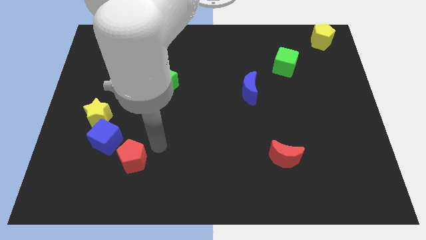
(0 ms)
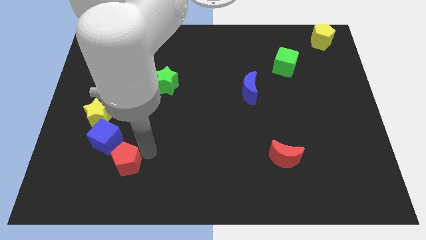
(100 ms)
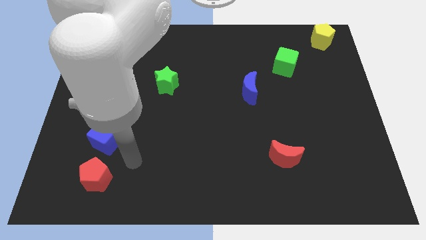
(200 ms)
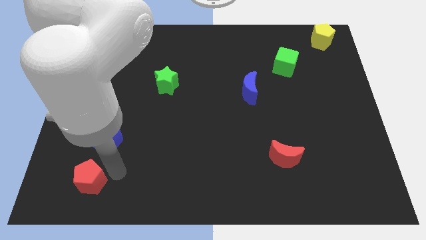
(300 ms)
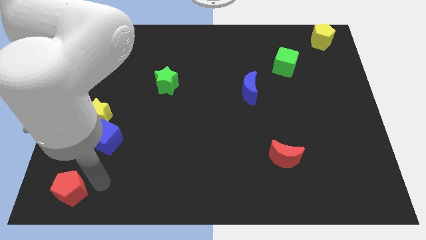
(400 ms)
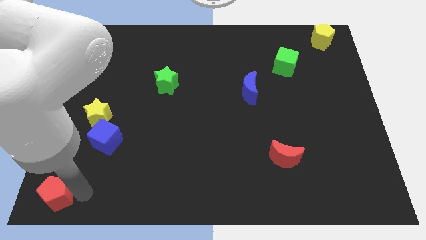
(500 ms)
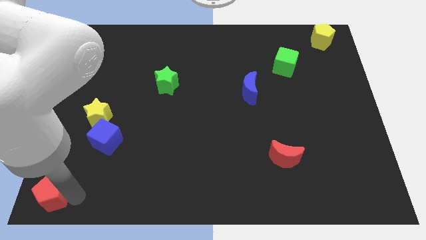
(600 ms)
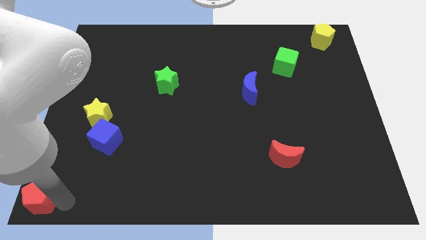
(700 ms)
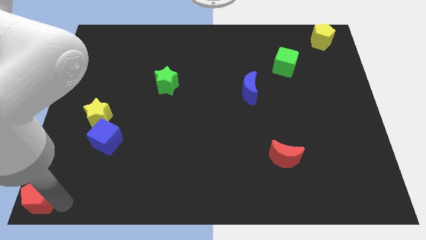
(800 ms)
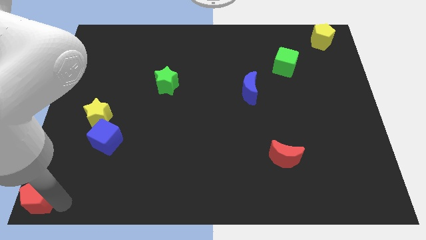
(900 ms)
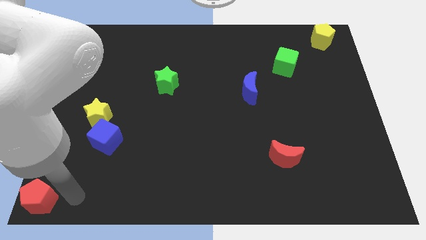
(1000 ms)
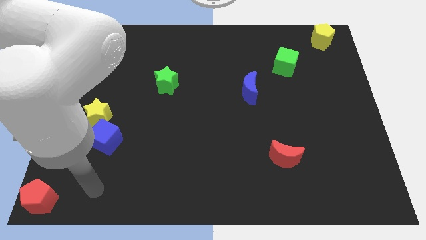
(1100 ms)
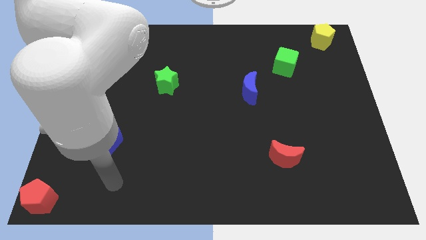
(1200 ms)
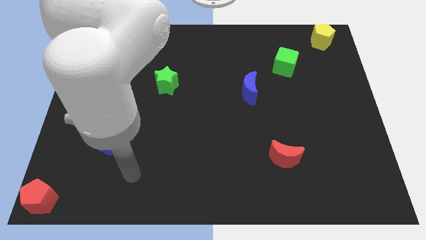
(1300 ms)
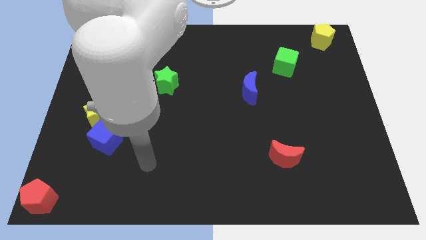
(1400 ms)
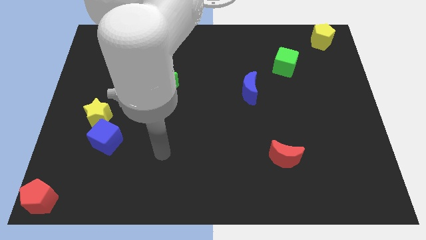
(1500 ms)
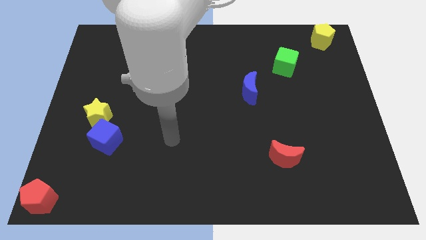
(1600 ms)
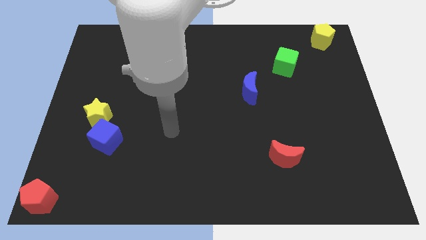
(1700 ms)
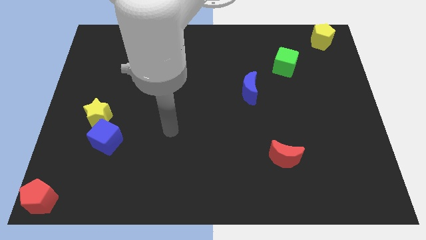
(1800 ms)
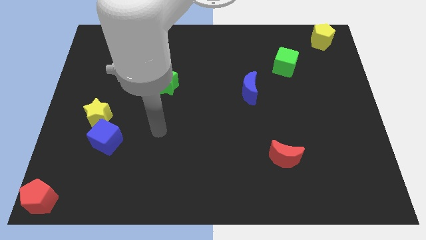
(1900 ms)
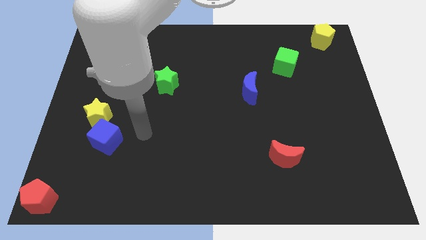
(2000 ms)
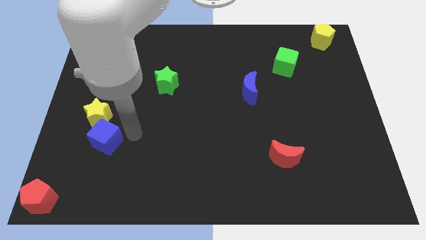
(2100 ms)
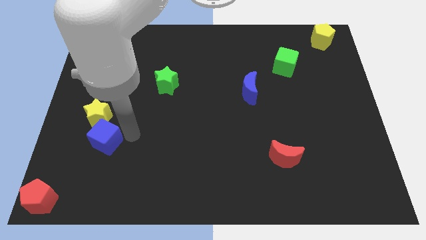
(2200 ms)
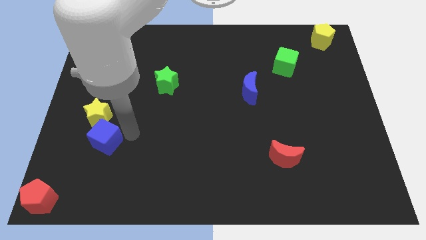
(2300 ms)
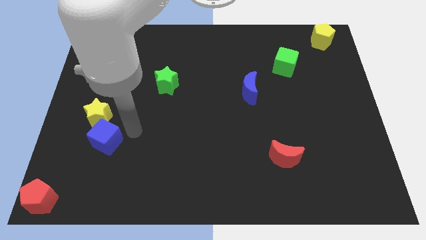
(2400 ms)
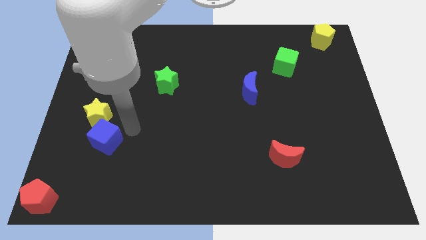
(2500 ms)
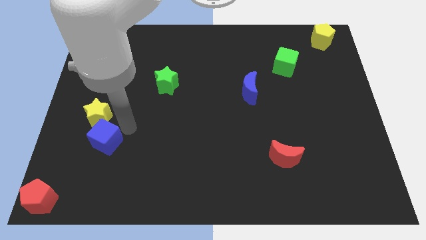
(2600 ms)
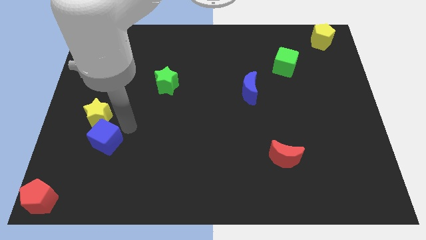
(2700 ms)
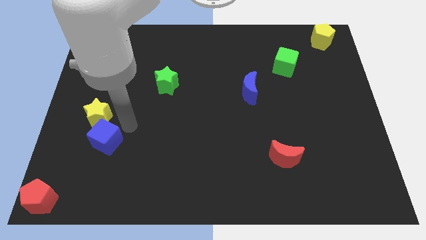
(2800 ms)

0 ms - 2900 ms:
place red pentagon at the bottom left corner of the board

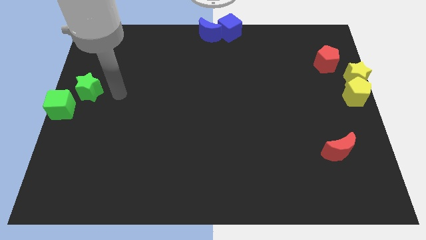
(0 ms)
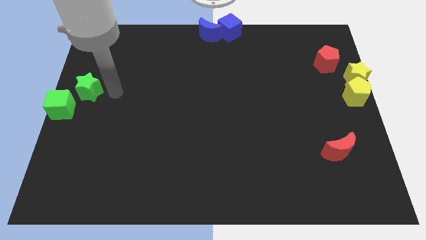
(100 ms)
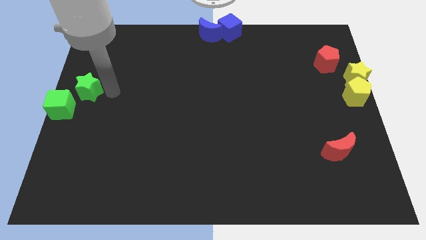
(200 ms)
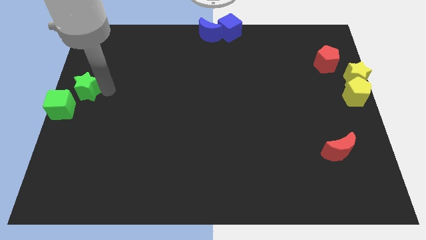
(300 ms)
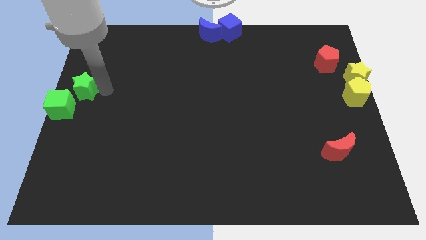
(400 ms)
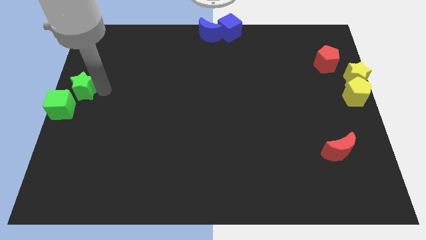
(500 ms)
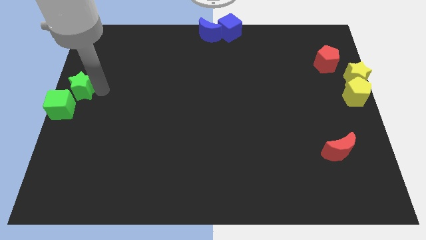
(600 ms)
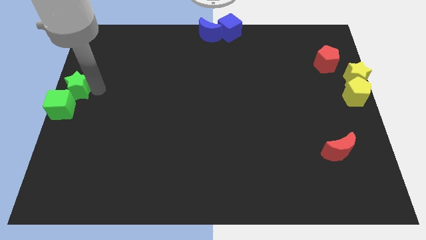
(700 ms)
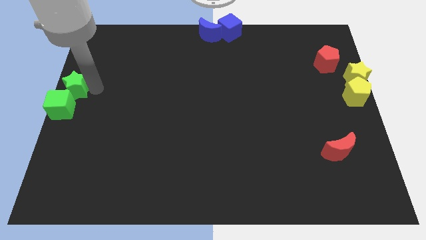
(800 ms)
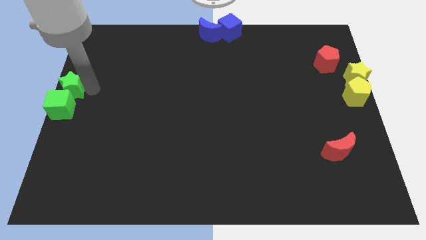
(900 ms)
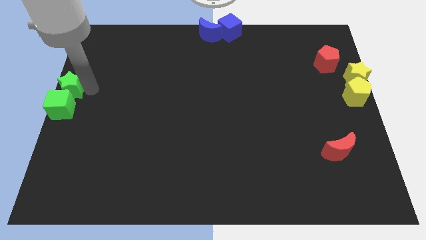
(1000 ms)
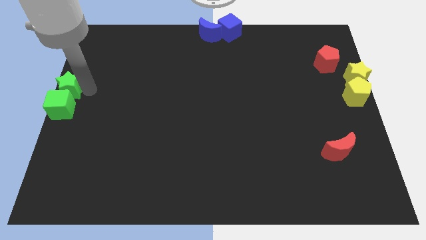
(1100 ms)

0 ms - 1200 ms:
move the green star above the green cube

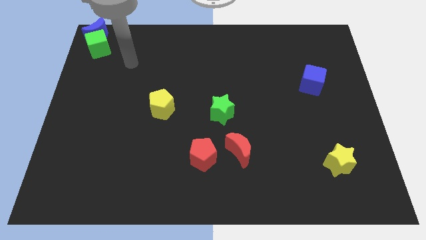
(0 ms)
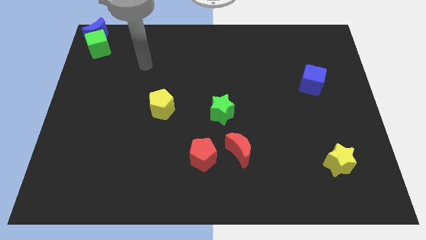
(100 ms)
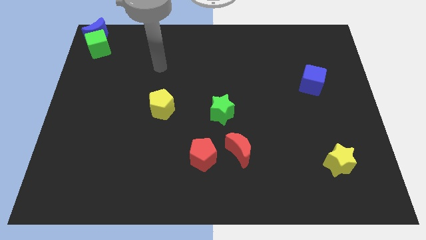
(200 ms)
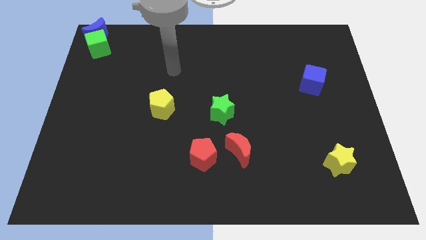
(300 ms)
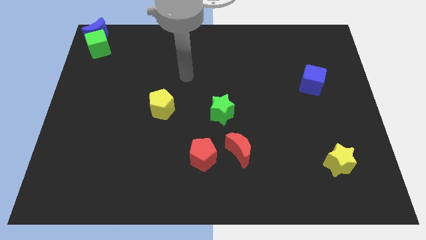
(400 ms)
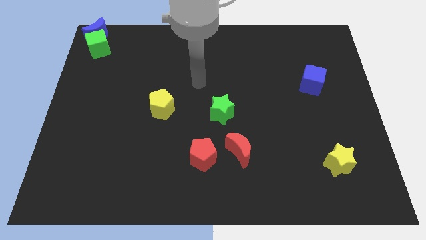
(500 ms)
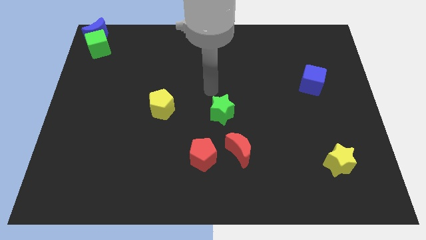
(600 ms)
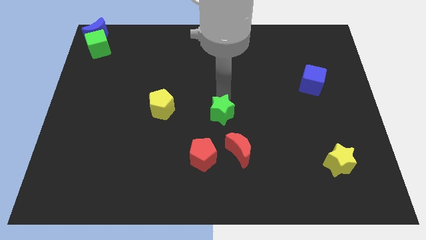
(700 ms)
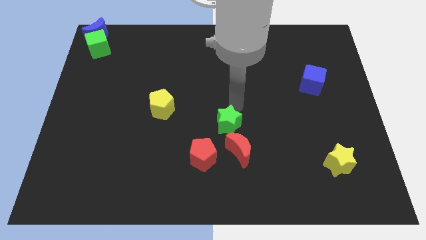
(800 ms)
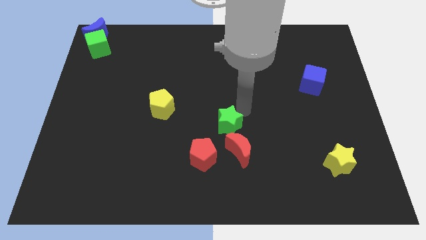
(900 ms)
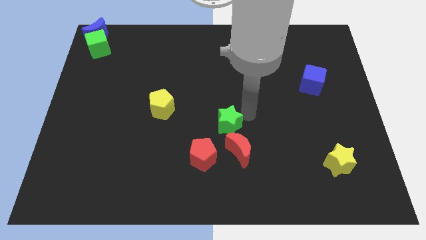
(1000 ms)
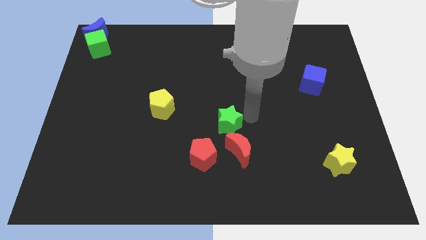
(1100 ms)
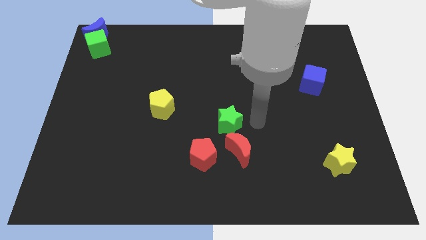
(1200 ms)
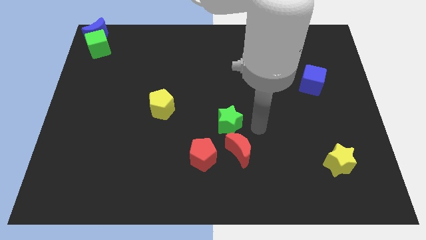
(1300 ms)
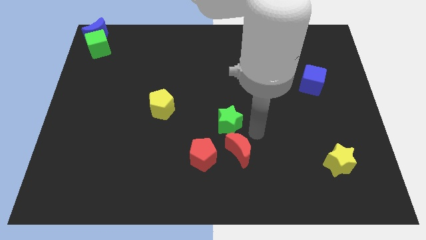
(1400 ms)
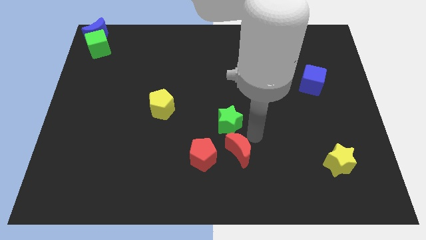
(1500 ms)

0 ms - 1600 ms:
push the green star towards the red crescent

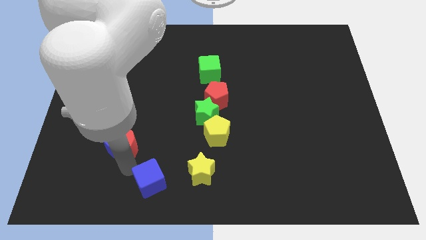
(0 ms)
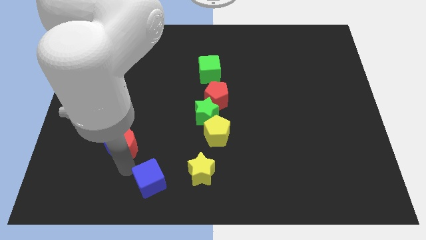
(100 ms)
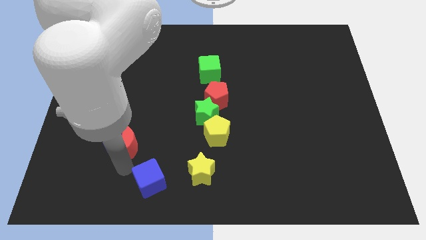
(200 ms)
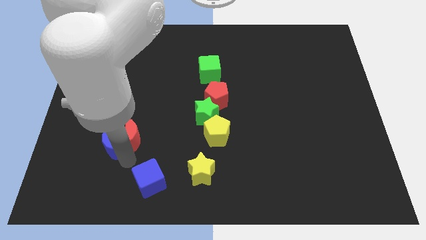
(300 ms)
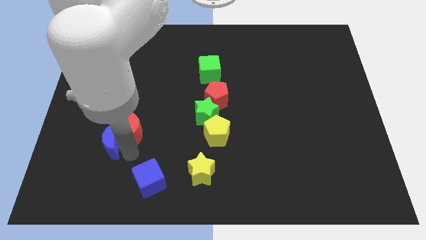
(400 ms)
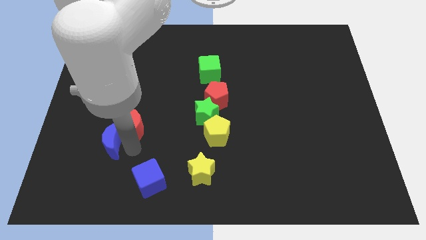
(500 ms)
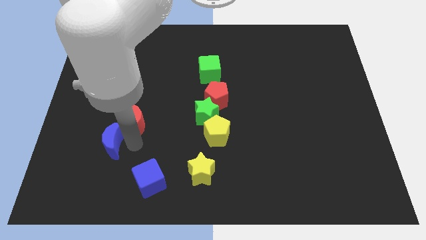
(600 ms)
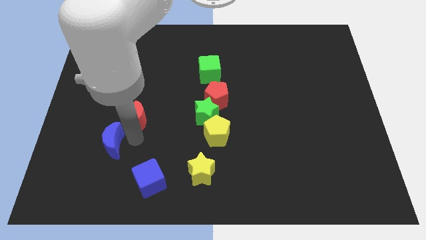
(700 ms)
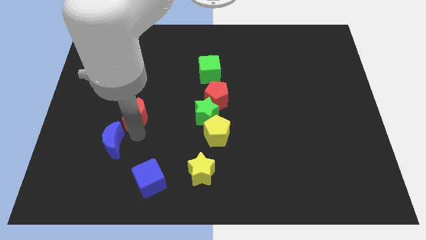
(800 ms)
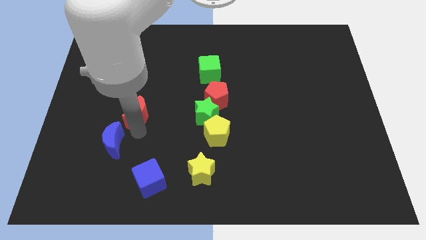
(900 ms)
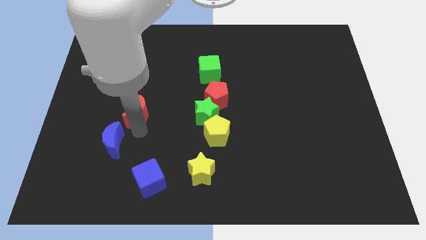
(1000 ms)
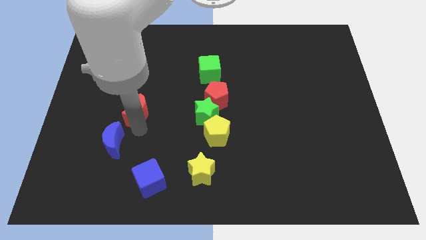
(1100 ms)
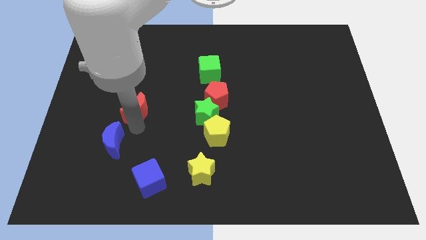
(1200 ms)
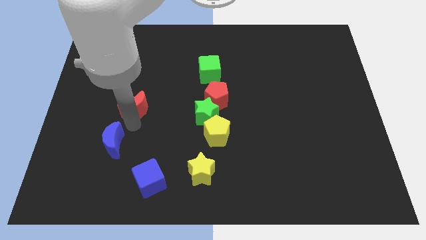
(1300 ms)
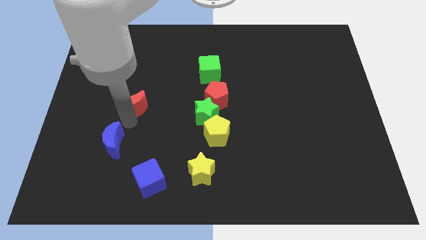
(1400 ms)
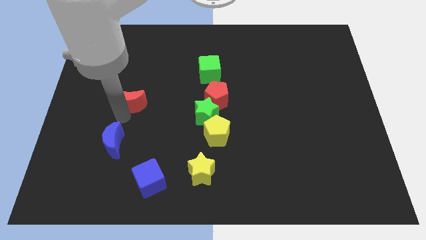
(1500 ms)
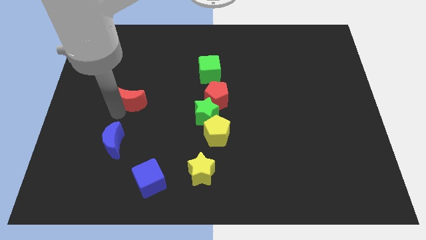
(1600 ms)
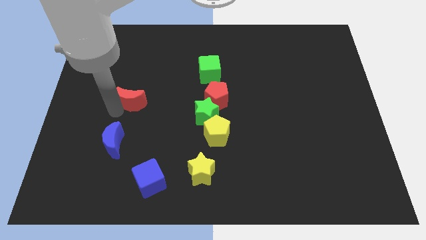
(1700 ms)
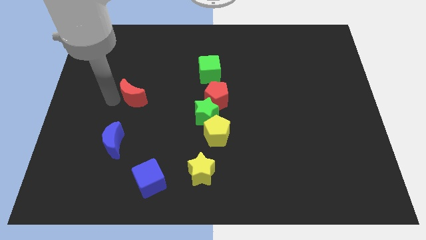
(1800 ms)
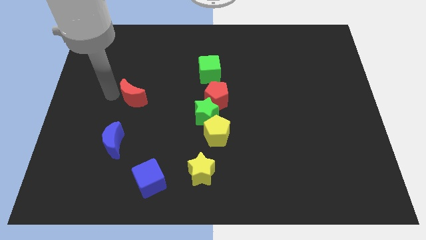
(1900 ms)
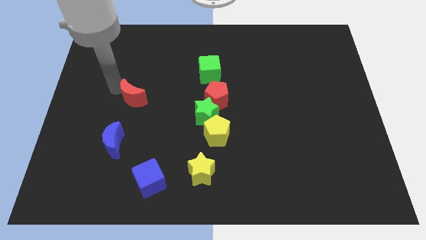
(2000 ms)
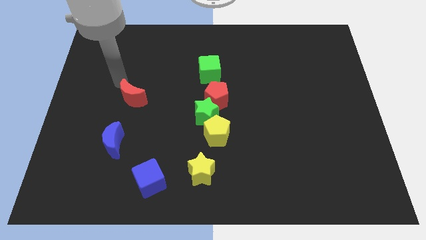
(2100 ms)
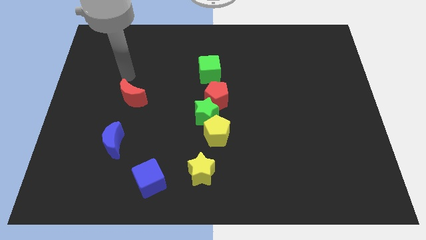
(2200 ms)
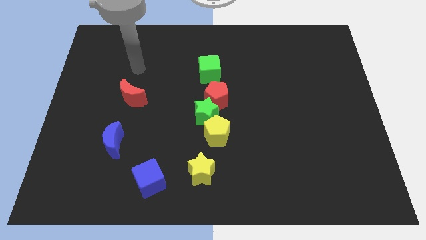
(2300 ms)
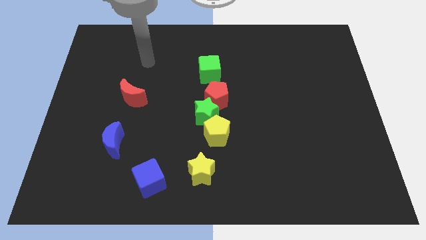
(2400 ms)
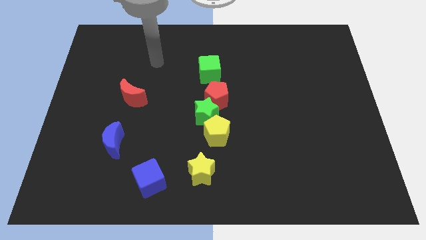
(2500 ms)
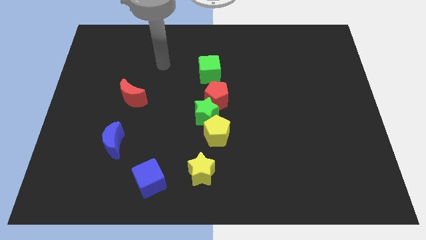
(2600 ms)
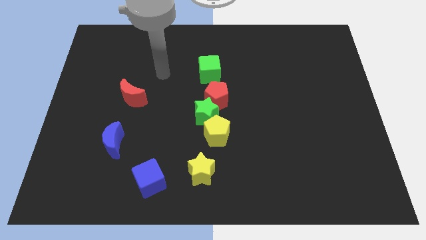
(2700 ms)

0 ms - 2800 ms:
separate red moon from blue crescent

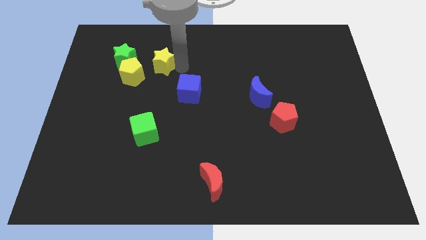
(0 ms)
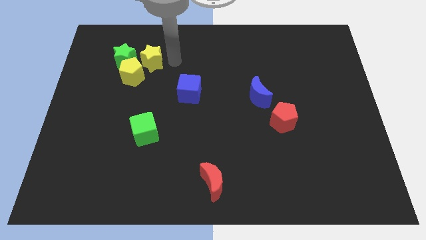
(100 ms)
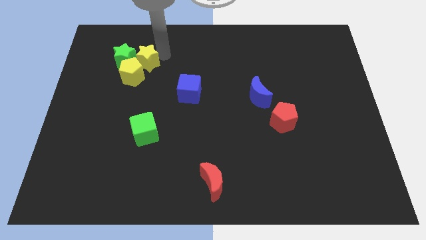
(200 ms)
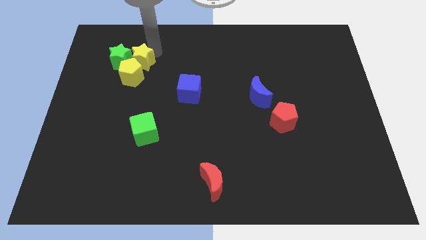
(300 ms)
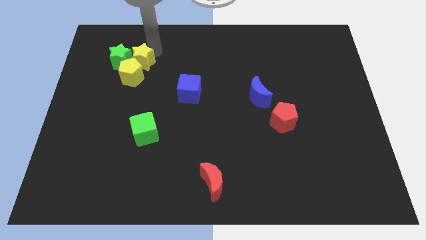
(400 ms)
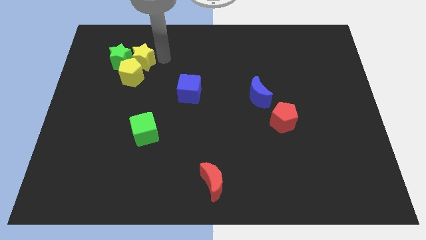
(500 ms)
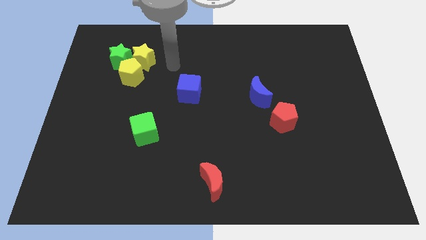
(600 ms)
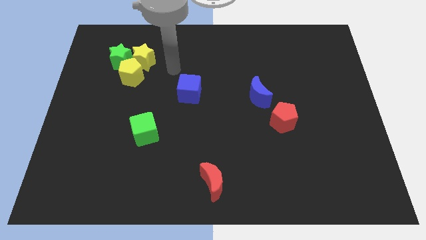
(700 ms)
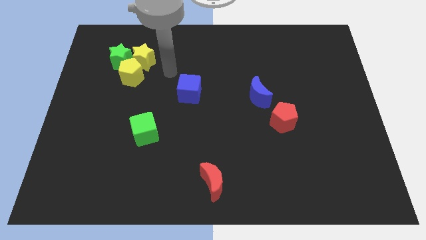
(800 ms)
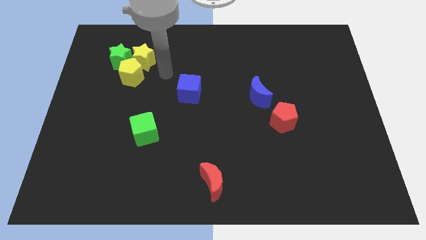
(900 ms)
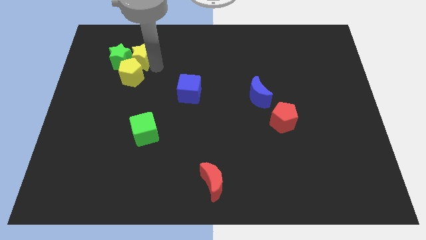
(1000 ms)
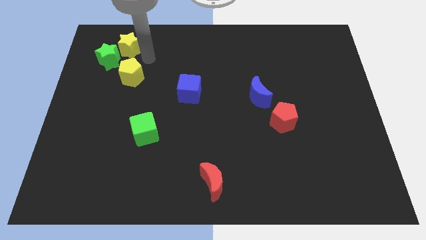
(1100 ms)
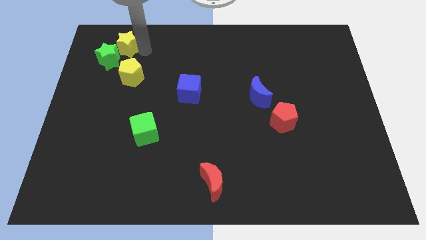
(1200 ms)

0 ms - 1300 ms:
move the yellow star towards the top right side of the green star
